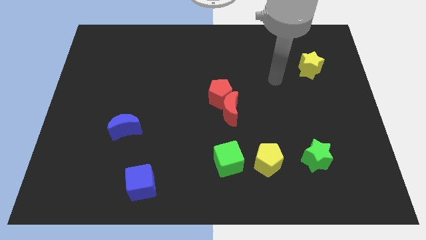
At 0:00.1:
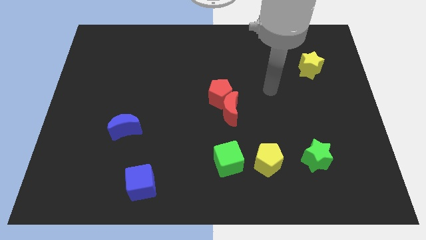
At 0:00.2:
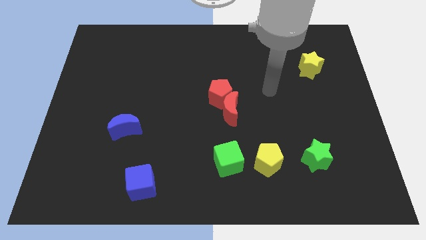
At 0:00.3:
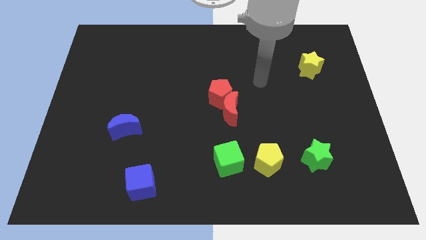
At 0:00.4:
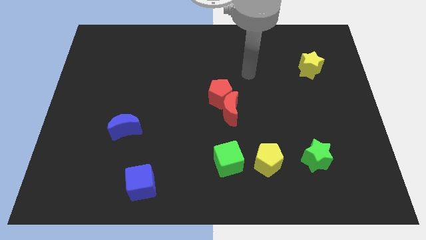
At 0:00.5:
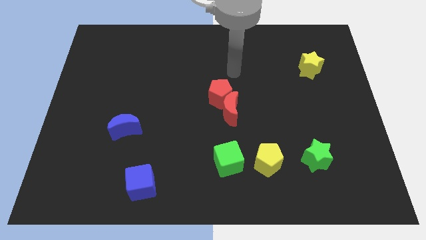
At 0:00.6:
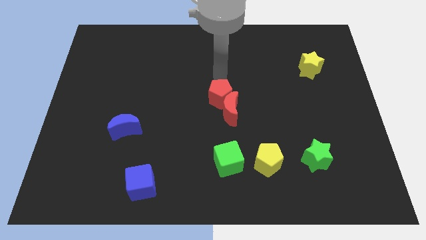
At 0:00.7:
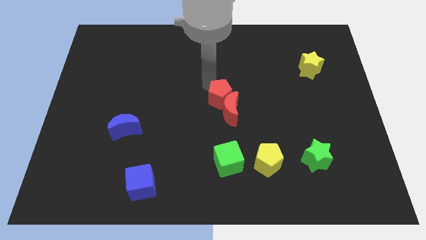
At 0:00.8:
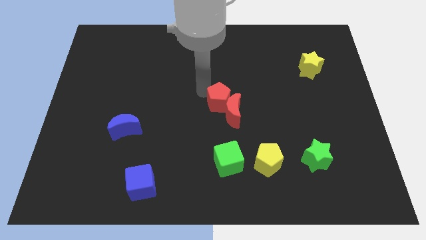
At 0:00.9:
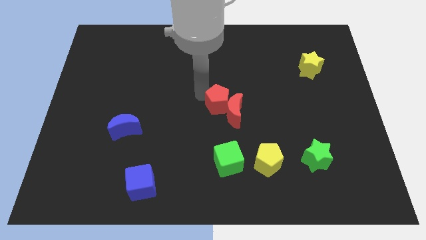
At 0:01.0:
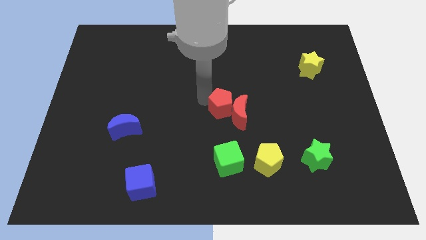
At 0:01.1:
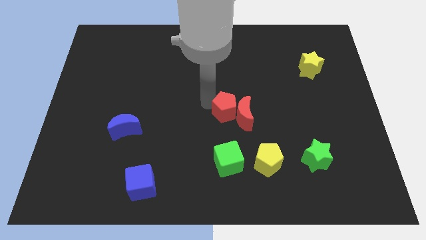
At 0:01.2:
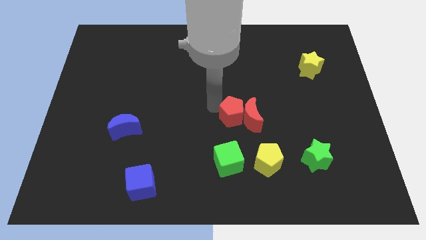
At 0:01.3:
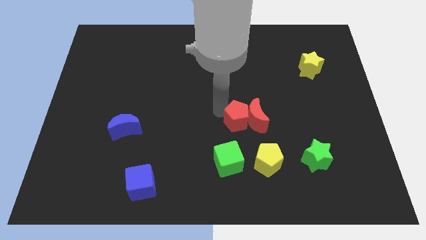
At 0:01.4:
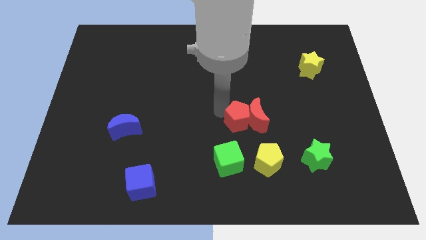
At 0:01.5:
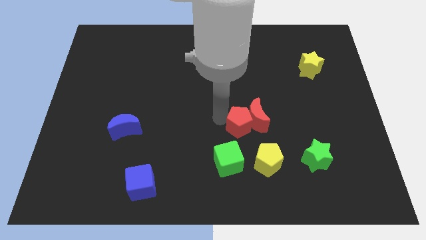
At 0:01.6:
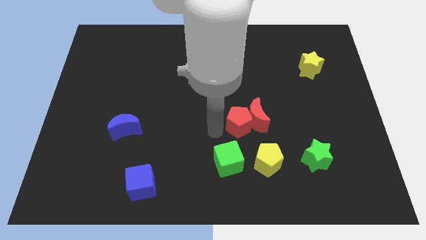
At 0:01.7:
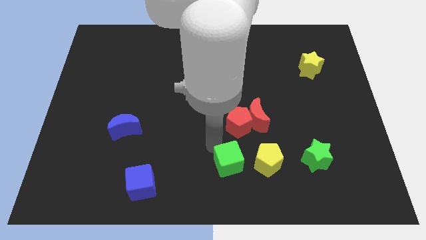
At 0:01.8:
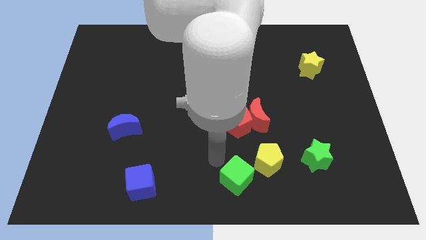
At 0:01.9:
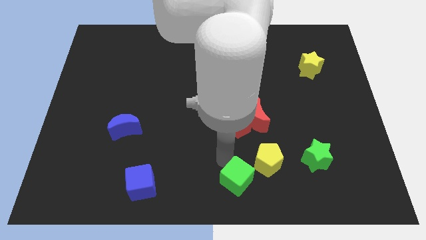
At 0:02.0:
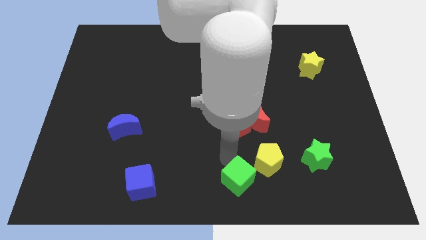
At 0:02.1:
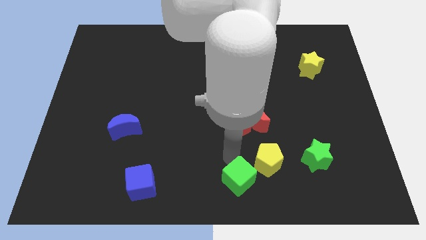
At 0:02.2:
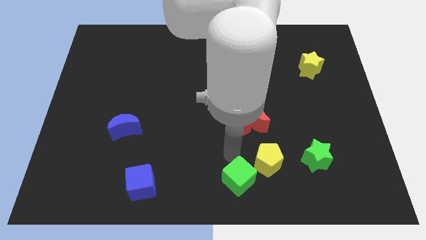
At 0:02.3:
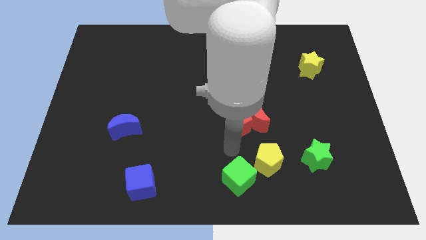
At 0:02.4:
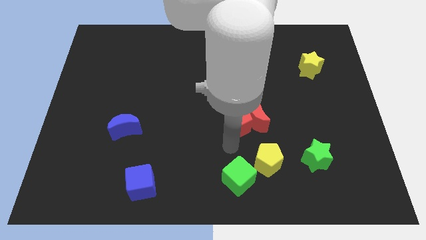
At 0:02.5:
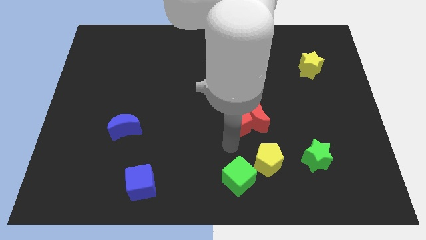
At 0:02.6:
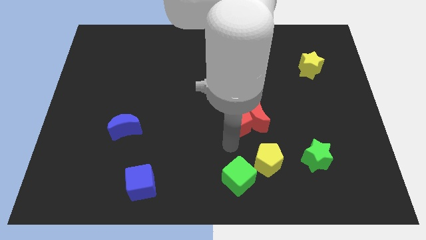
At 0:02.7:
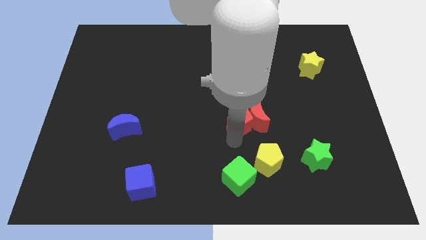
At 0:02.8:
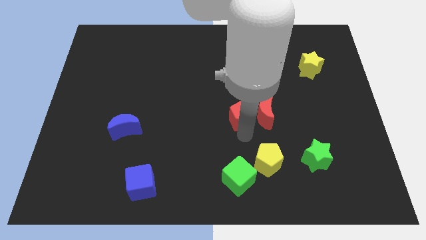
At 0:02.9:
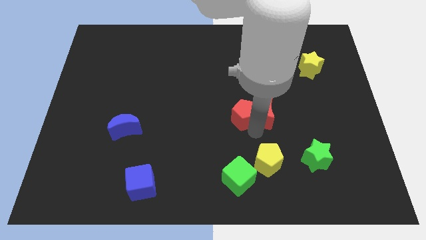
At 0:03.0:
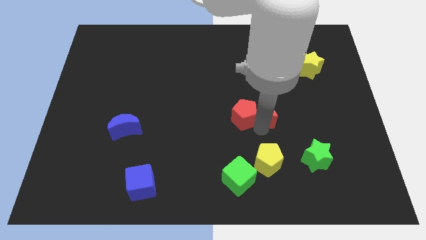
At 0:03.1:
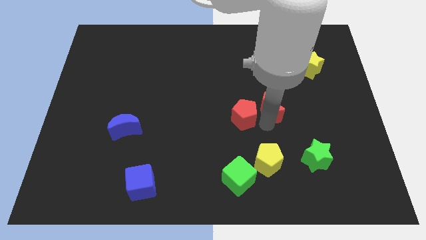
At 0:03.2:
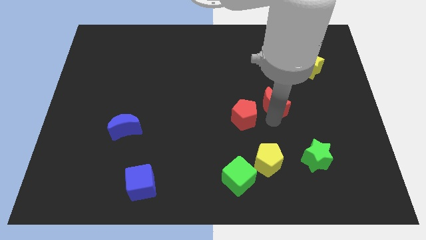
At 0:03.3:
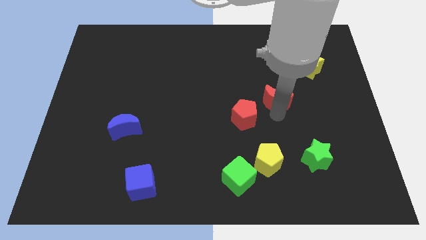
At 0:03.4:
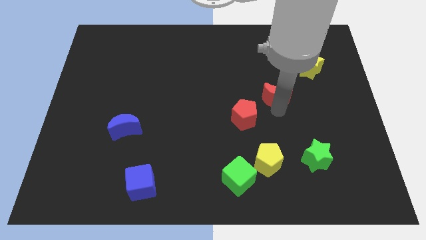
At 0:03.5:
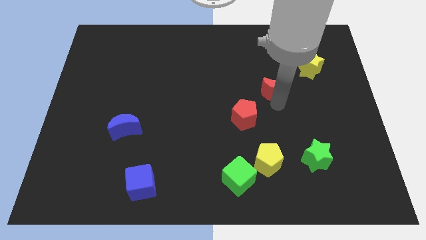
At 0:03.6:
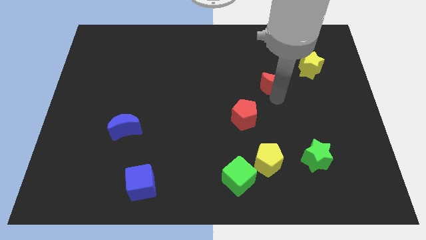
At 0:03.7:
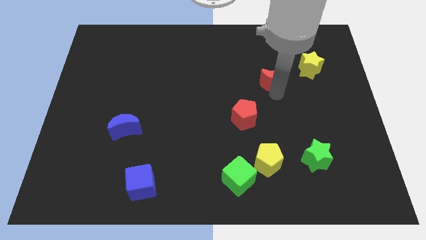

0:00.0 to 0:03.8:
move the two red blocks slightly with the green cube

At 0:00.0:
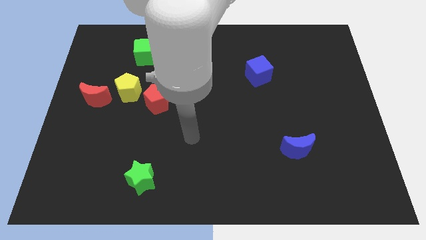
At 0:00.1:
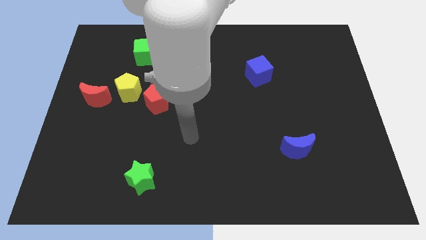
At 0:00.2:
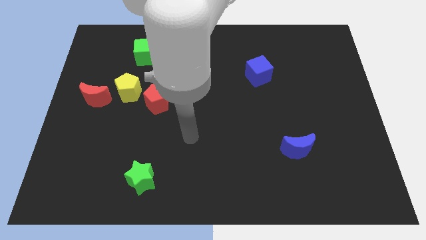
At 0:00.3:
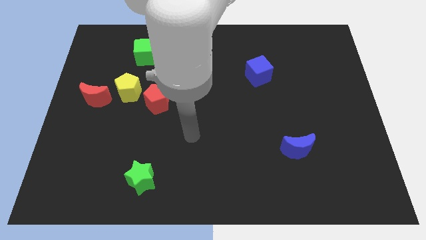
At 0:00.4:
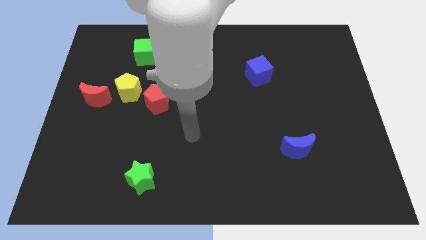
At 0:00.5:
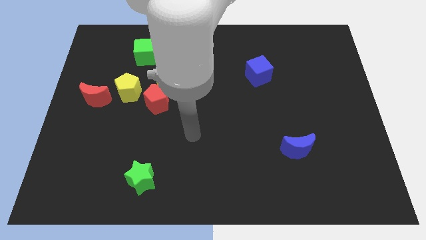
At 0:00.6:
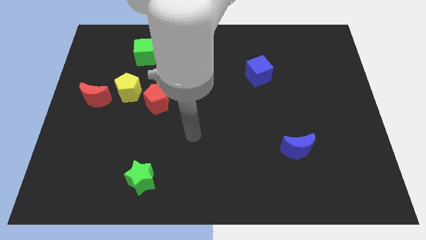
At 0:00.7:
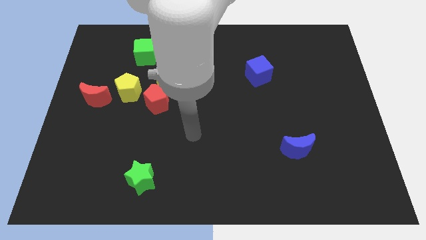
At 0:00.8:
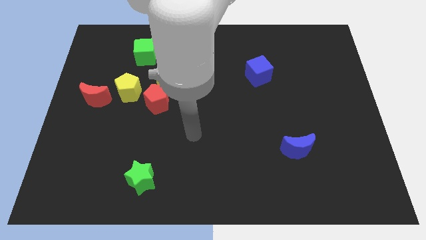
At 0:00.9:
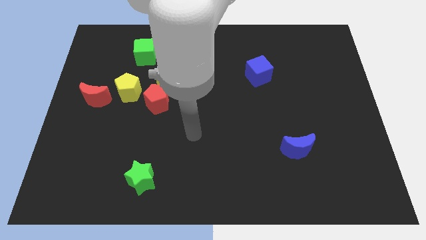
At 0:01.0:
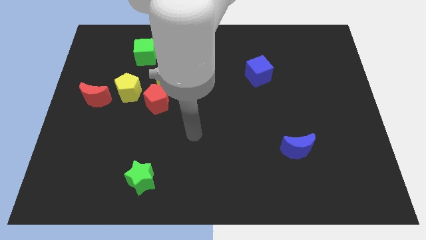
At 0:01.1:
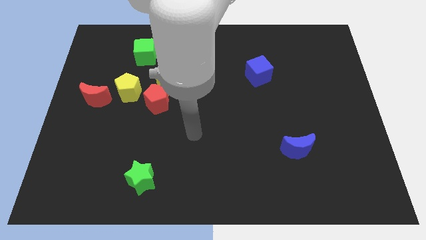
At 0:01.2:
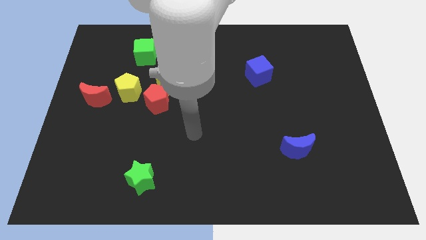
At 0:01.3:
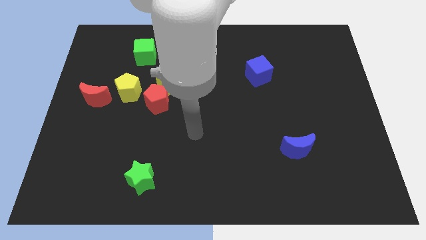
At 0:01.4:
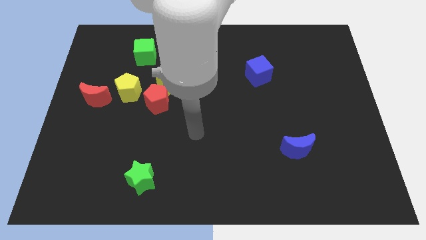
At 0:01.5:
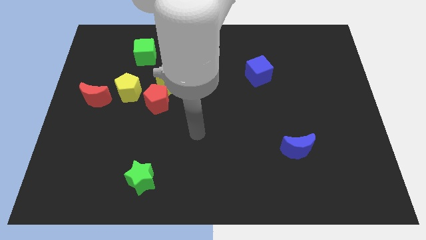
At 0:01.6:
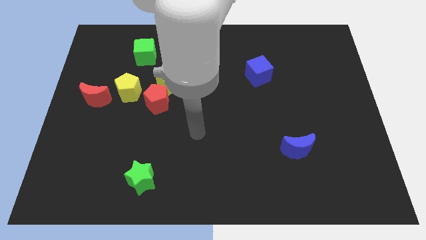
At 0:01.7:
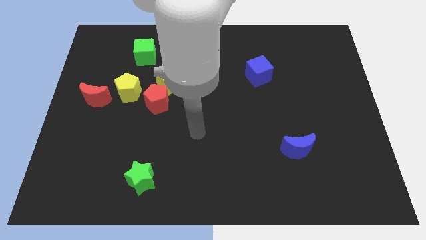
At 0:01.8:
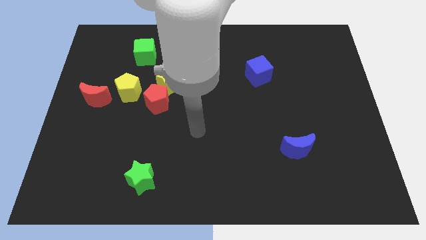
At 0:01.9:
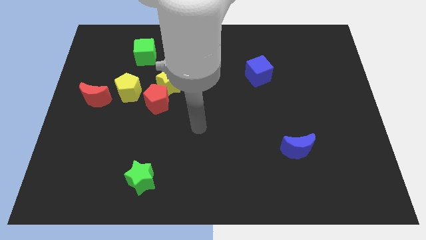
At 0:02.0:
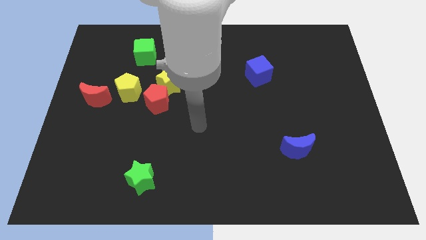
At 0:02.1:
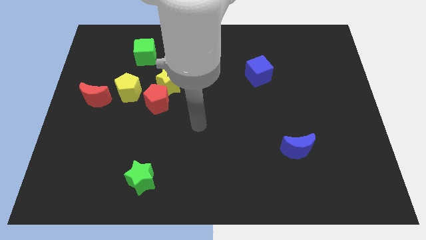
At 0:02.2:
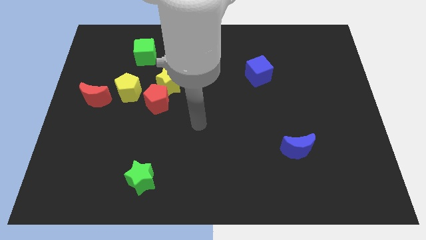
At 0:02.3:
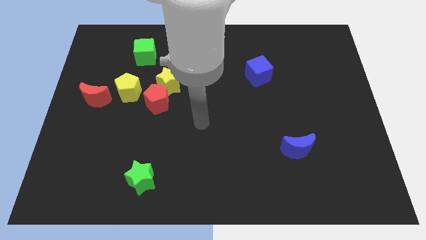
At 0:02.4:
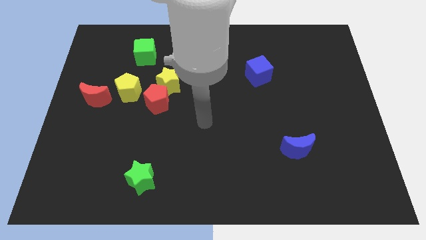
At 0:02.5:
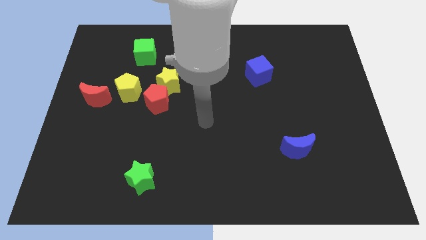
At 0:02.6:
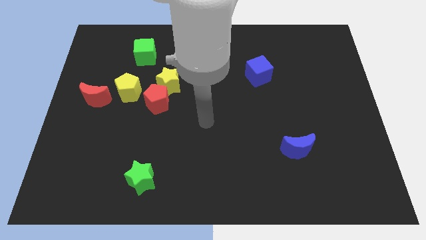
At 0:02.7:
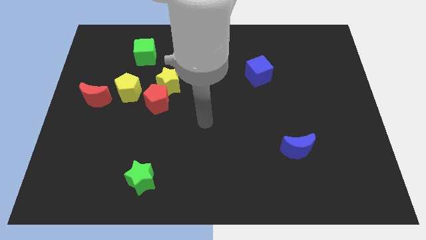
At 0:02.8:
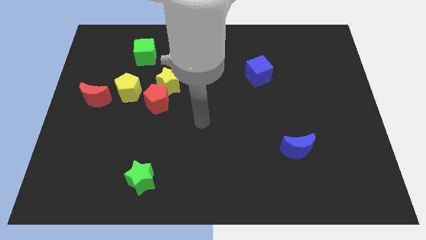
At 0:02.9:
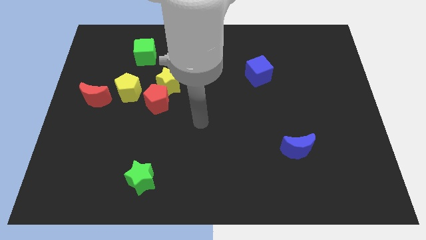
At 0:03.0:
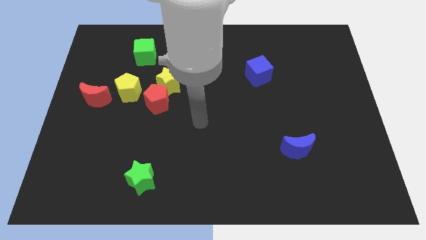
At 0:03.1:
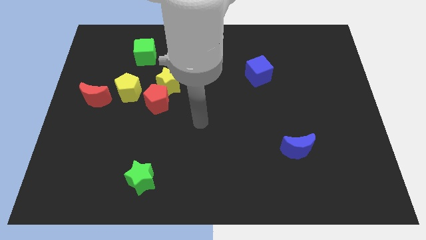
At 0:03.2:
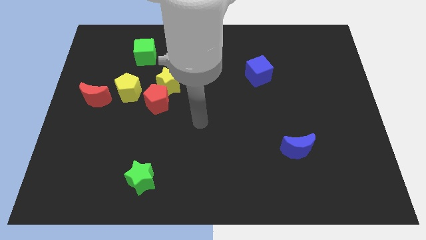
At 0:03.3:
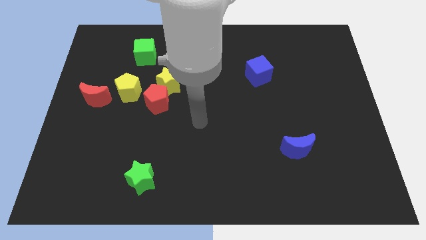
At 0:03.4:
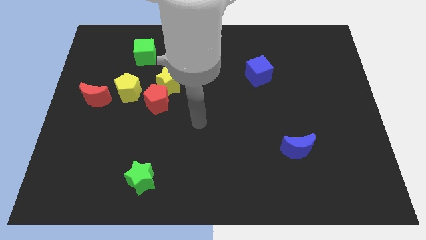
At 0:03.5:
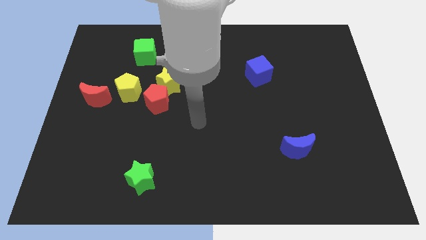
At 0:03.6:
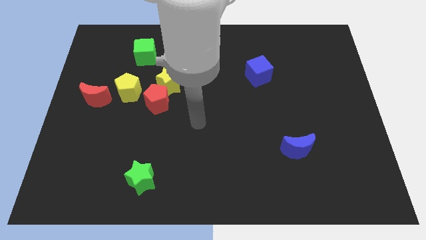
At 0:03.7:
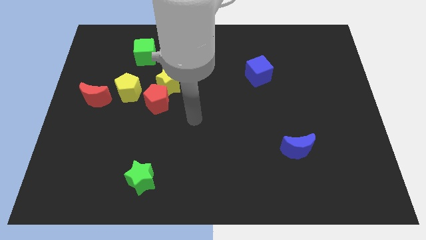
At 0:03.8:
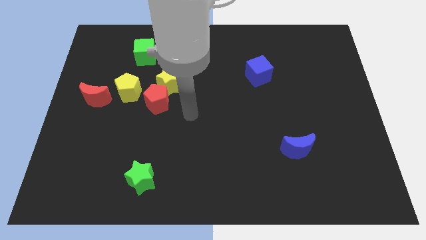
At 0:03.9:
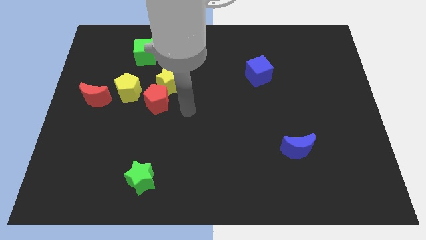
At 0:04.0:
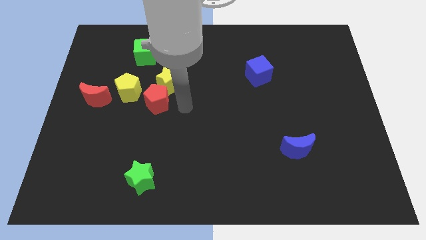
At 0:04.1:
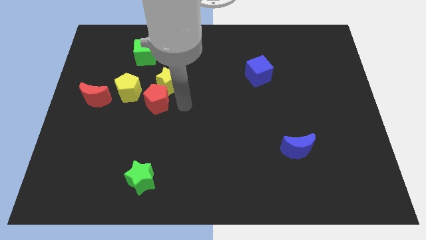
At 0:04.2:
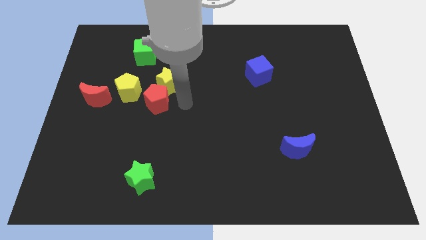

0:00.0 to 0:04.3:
point your arm at the right side of the red pentagon

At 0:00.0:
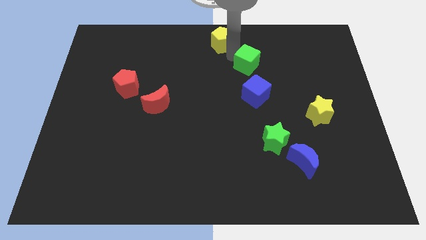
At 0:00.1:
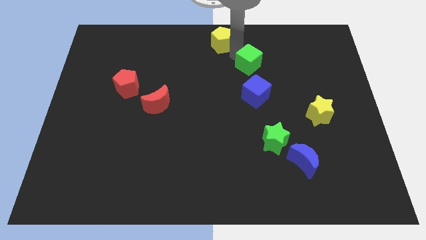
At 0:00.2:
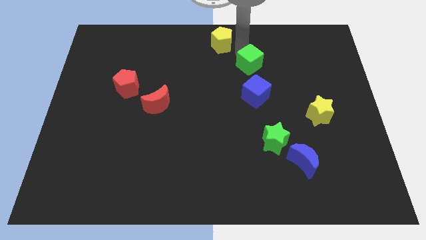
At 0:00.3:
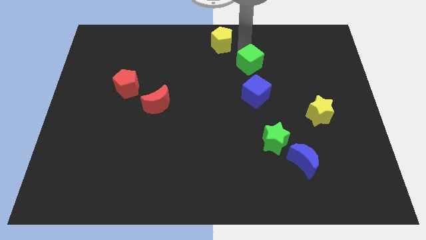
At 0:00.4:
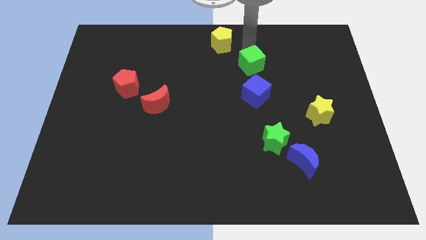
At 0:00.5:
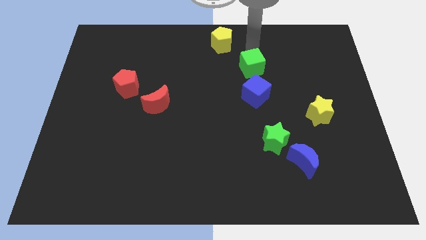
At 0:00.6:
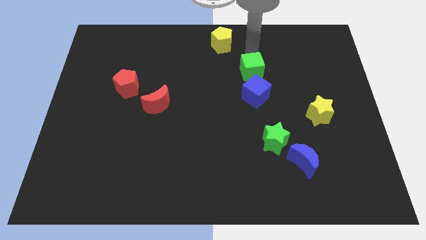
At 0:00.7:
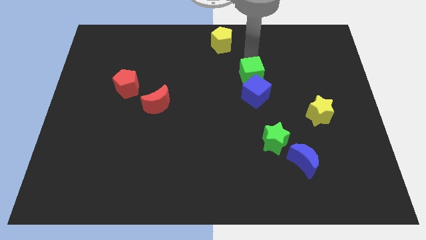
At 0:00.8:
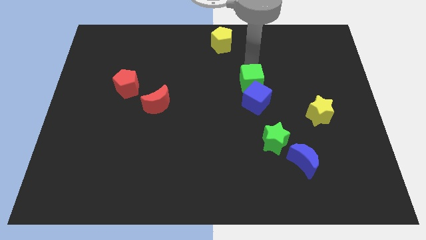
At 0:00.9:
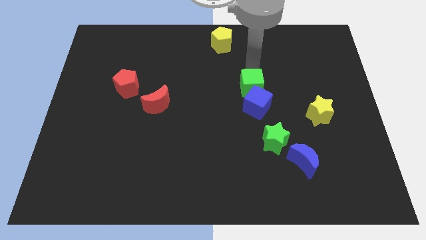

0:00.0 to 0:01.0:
push the green cube into the blue cube
